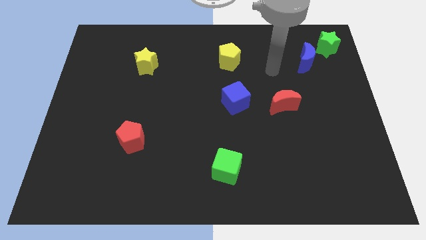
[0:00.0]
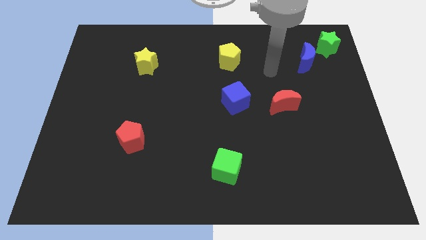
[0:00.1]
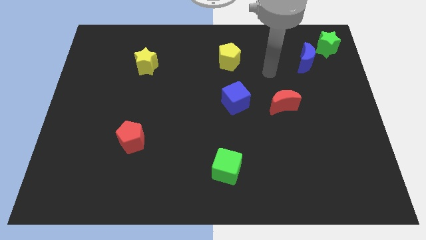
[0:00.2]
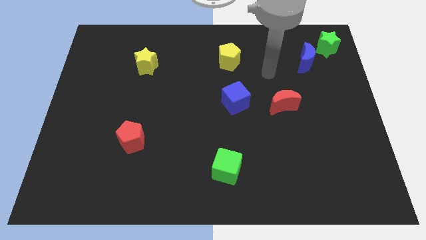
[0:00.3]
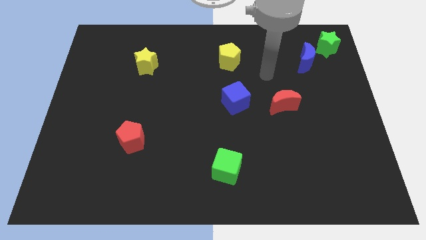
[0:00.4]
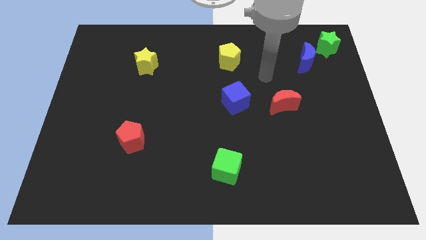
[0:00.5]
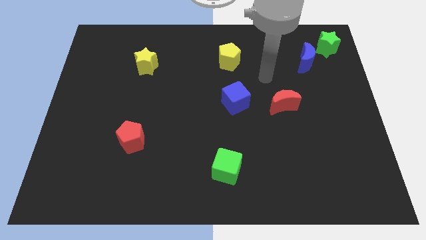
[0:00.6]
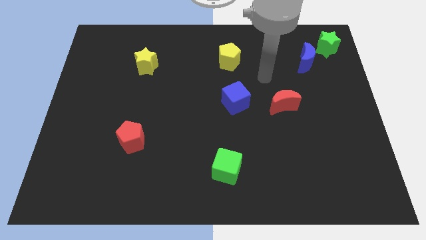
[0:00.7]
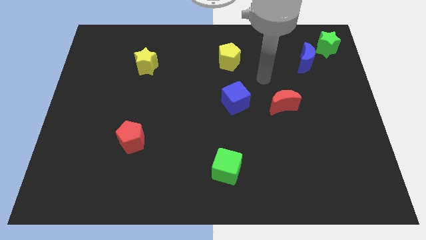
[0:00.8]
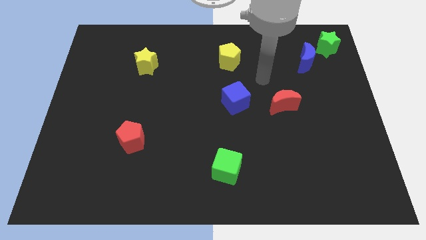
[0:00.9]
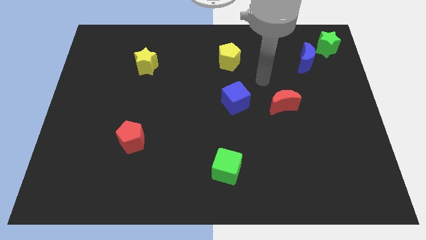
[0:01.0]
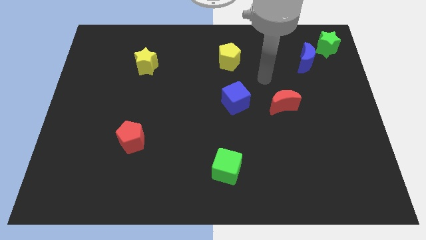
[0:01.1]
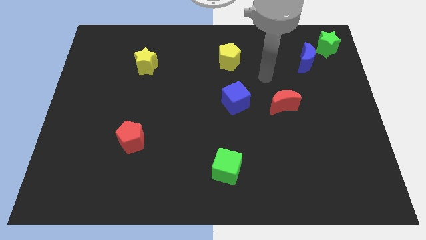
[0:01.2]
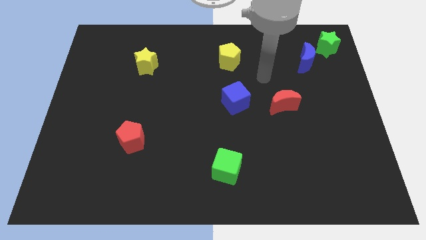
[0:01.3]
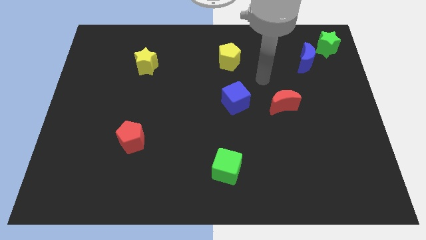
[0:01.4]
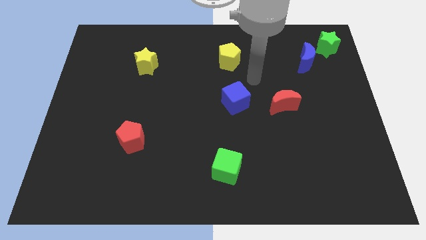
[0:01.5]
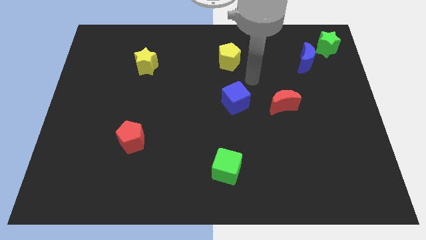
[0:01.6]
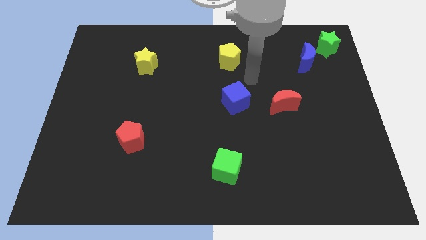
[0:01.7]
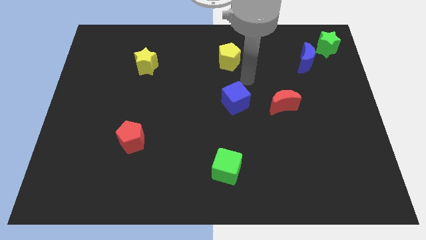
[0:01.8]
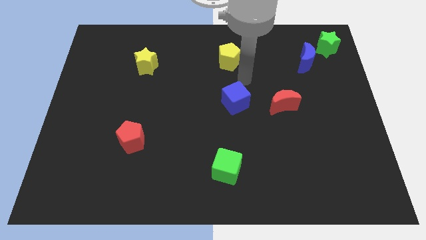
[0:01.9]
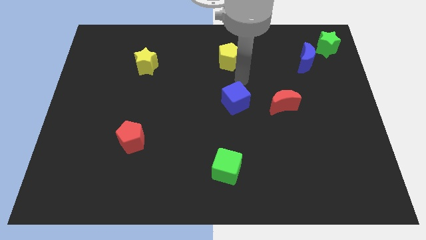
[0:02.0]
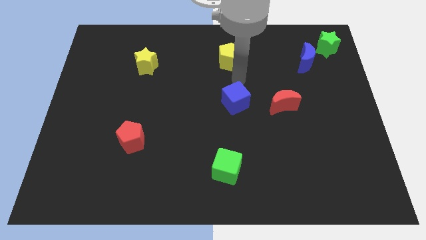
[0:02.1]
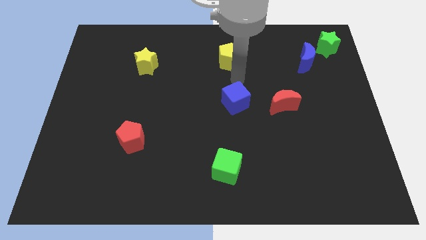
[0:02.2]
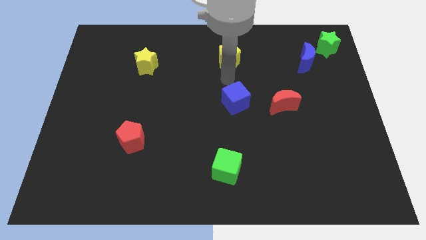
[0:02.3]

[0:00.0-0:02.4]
place your arm in between the blue cube and the yellow pentagon

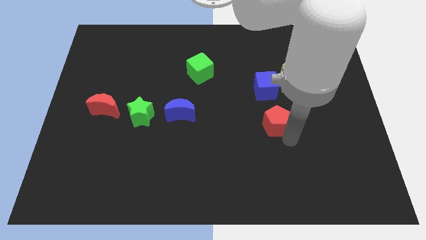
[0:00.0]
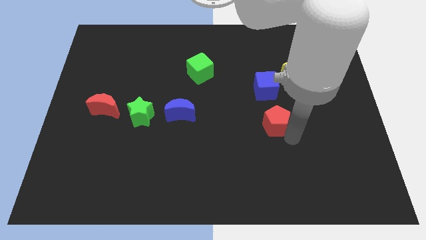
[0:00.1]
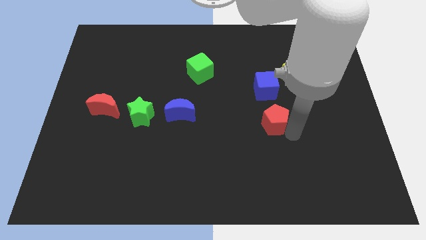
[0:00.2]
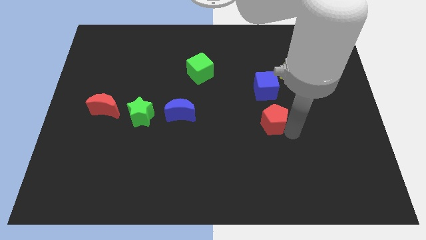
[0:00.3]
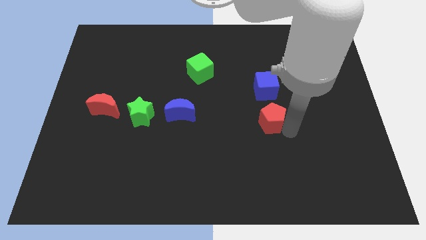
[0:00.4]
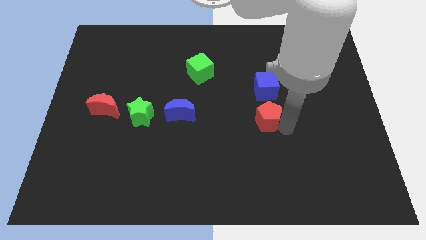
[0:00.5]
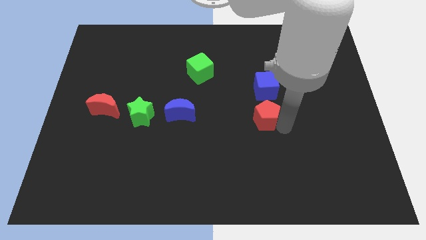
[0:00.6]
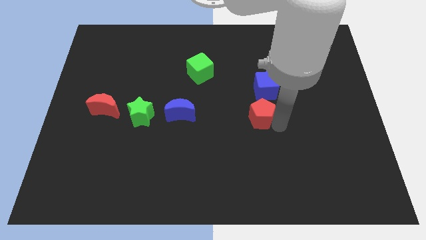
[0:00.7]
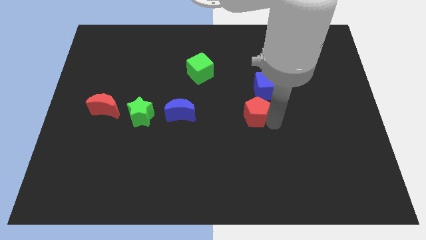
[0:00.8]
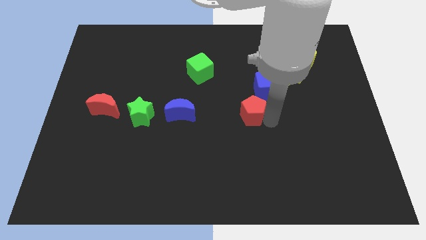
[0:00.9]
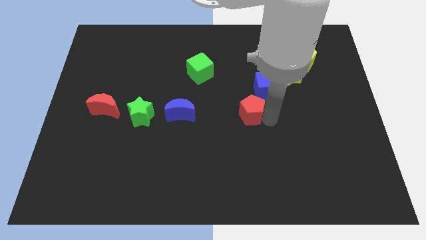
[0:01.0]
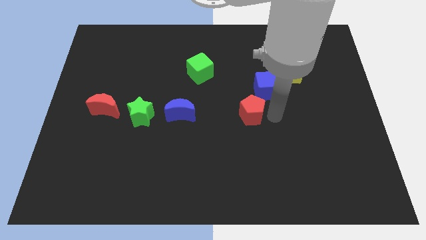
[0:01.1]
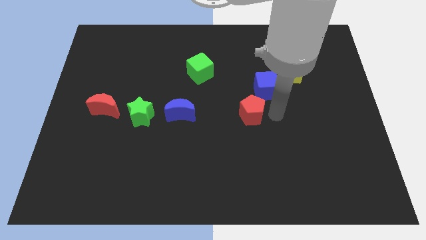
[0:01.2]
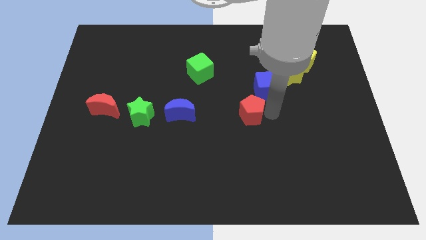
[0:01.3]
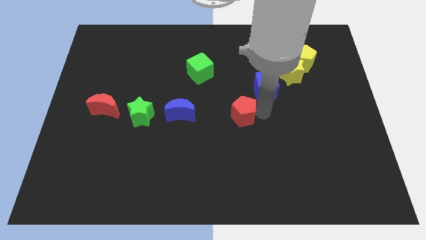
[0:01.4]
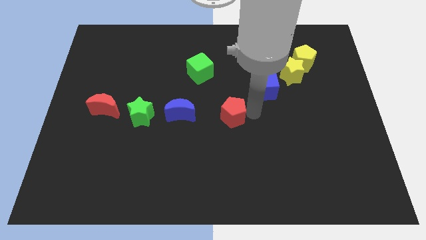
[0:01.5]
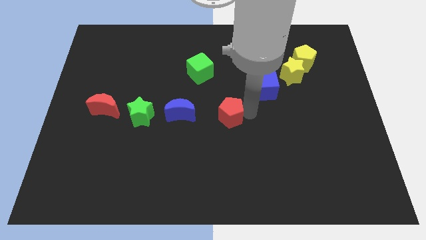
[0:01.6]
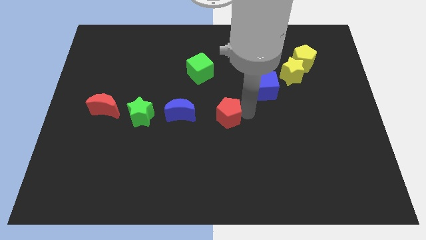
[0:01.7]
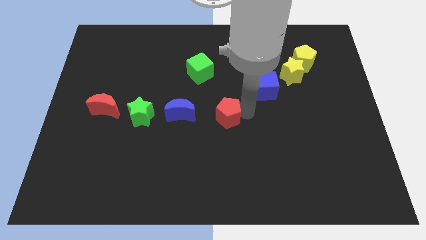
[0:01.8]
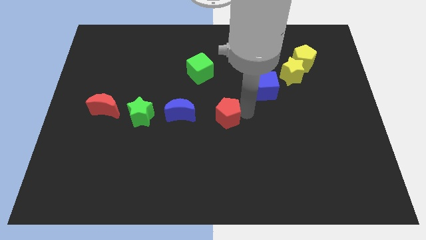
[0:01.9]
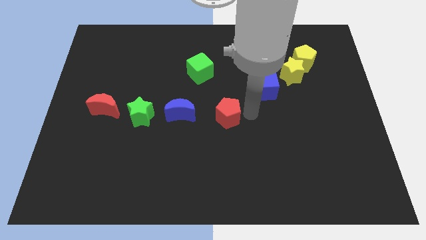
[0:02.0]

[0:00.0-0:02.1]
slide red pentagon to the center

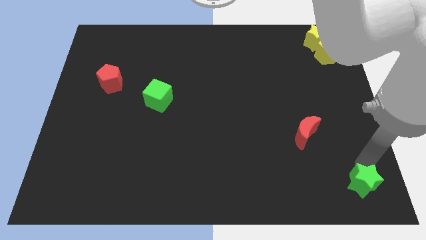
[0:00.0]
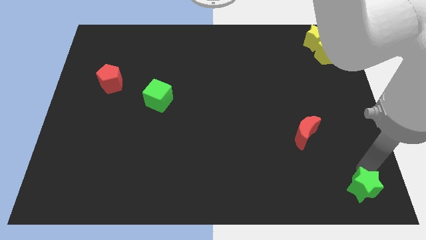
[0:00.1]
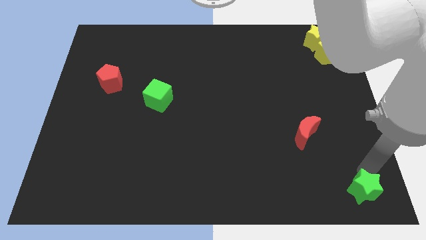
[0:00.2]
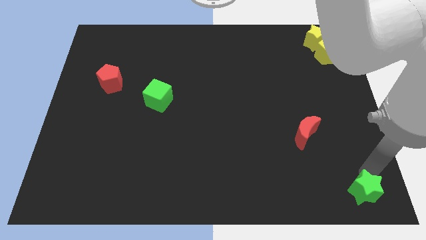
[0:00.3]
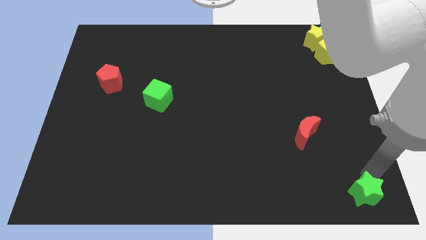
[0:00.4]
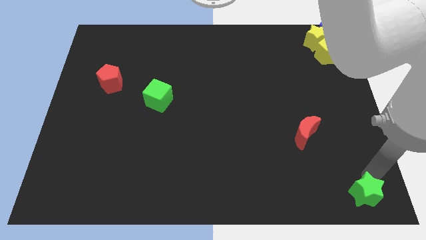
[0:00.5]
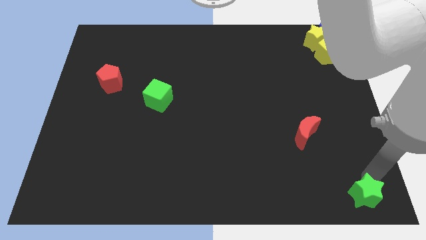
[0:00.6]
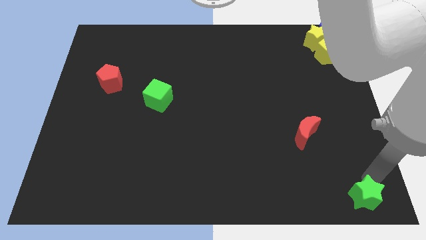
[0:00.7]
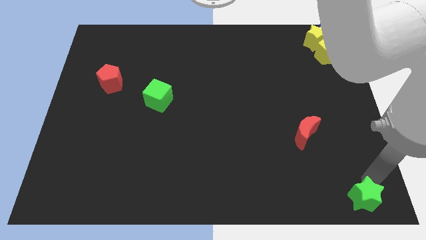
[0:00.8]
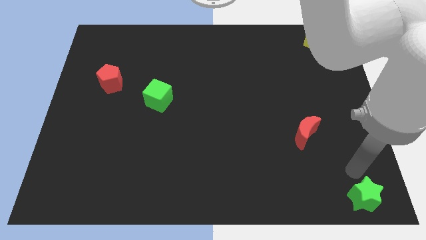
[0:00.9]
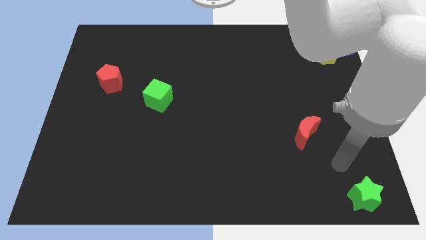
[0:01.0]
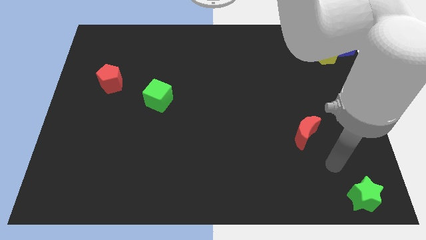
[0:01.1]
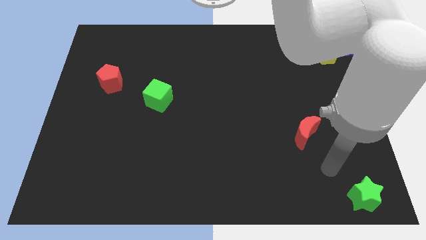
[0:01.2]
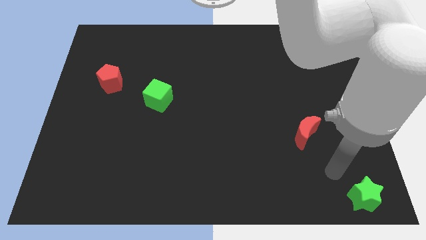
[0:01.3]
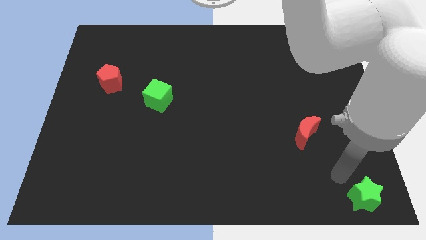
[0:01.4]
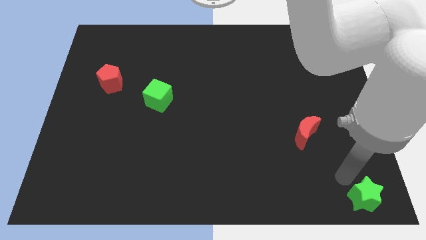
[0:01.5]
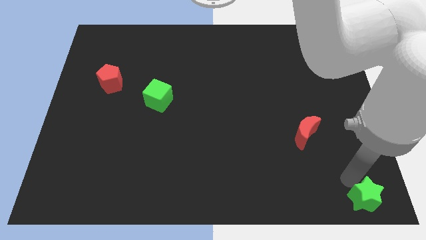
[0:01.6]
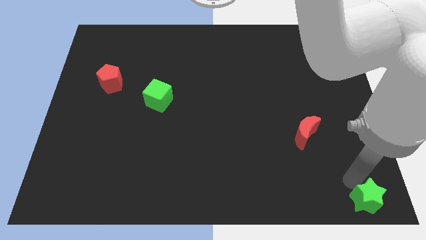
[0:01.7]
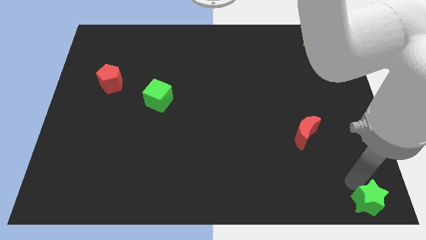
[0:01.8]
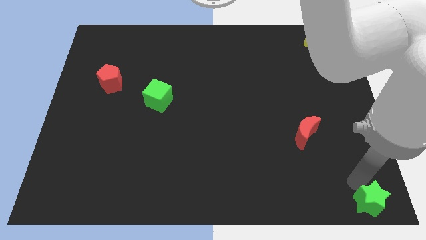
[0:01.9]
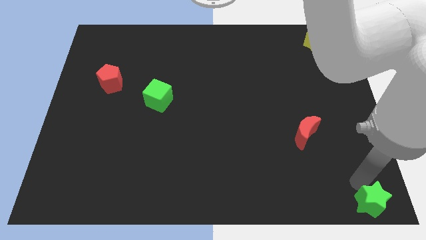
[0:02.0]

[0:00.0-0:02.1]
place the green star at the bottom right corner

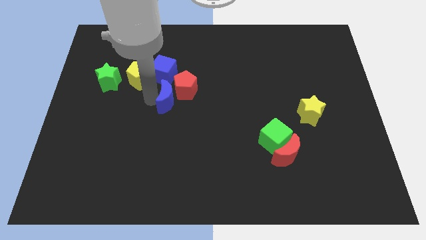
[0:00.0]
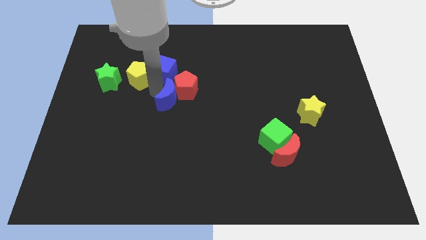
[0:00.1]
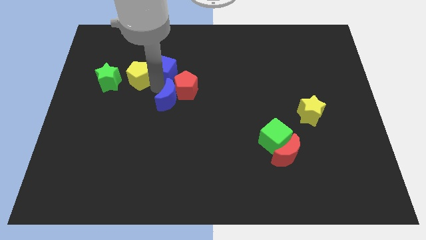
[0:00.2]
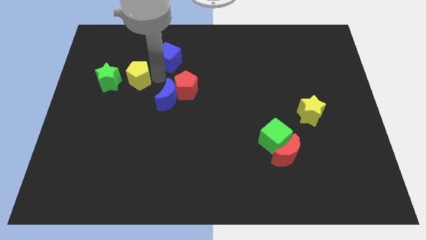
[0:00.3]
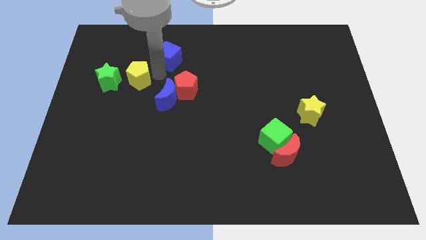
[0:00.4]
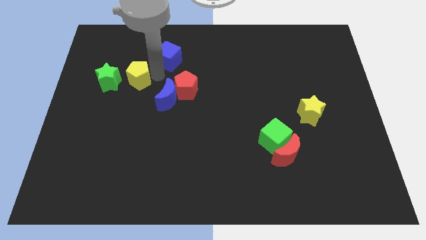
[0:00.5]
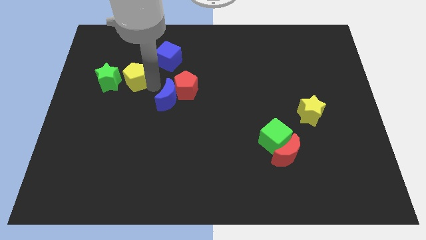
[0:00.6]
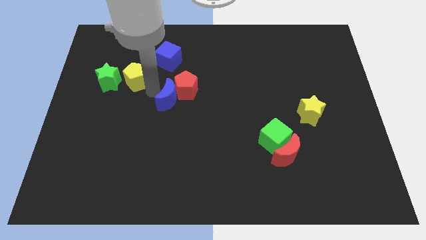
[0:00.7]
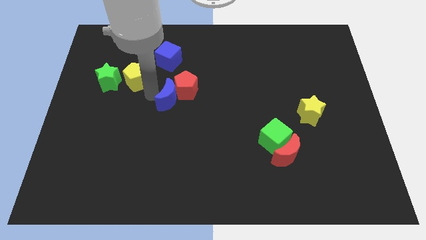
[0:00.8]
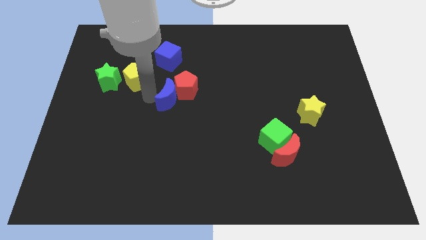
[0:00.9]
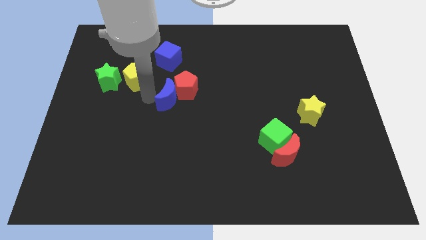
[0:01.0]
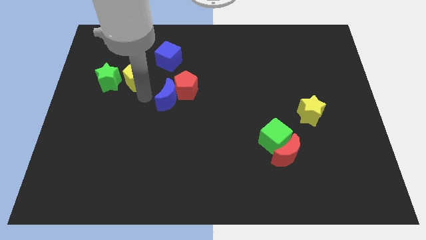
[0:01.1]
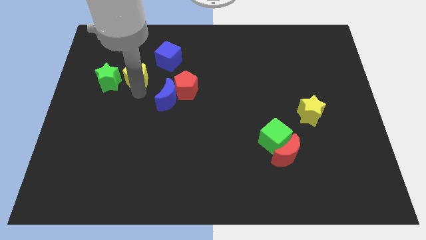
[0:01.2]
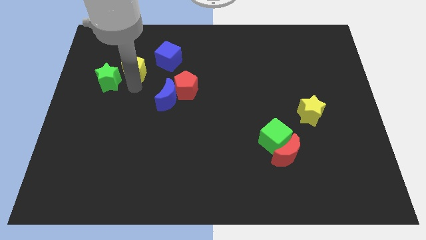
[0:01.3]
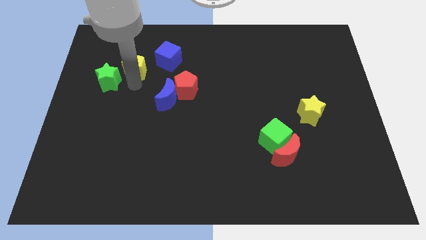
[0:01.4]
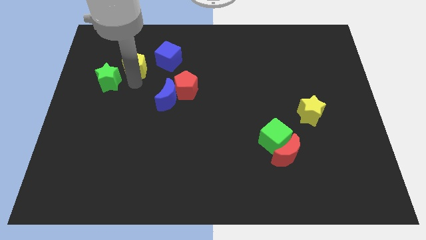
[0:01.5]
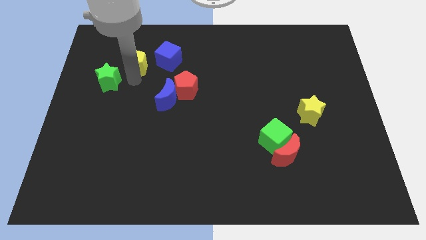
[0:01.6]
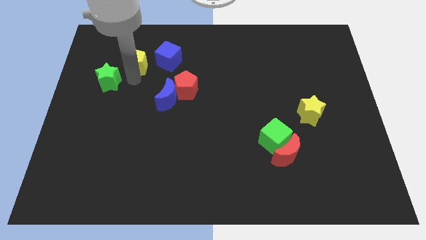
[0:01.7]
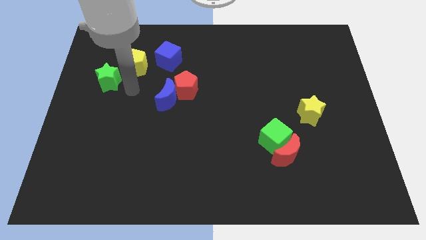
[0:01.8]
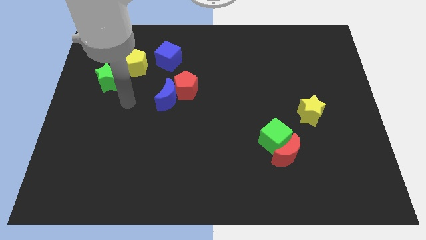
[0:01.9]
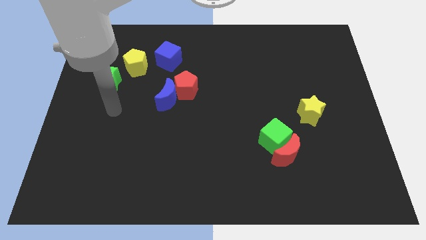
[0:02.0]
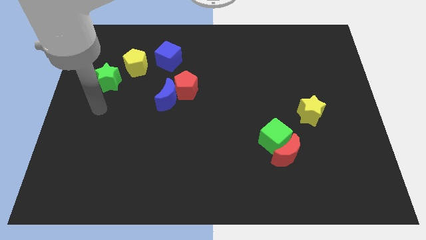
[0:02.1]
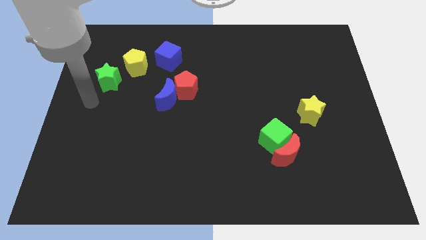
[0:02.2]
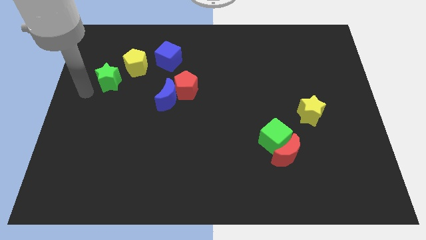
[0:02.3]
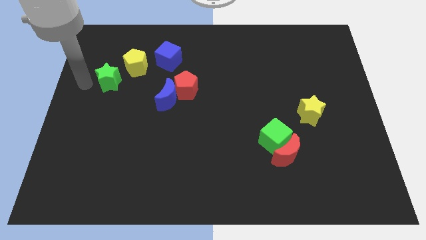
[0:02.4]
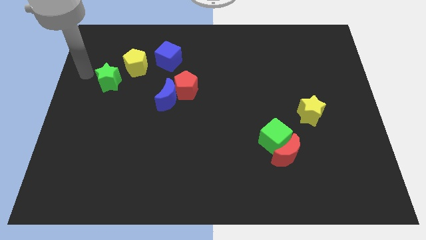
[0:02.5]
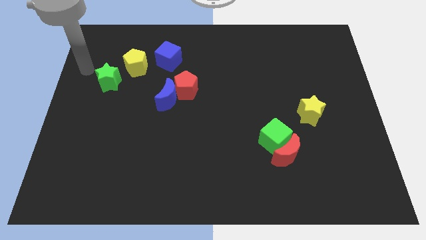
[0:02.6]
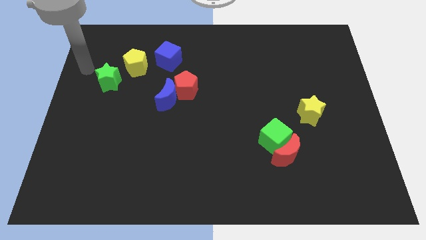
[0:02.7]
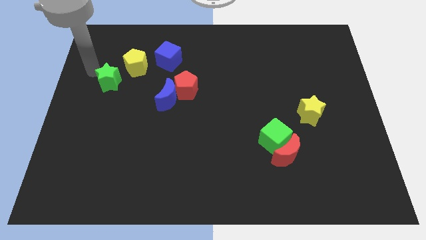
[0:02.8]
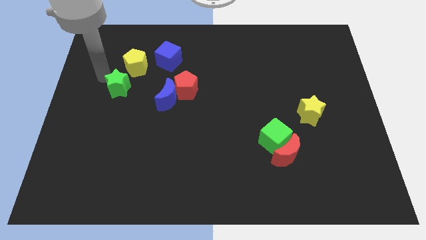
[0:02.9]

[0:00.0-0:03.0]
separate the blue blocks and the yellow pentagon
